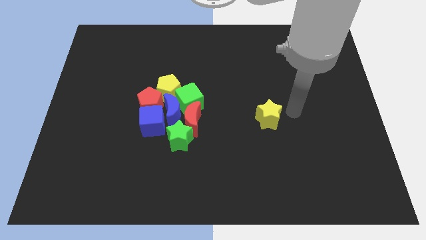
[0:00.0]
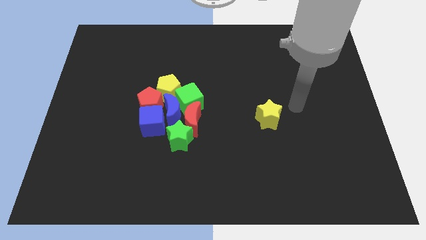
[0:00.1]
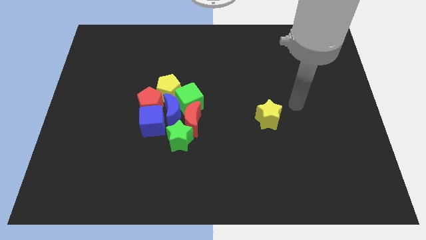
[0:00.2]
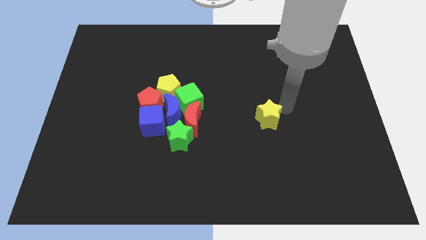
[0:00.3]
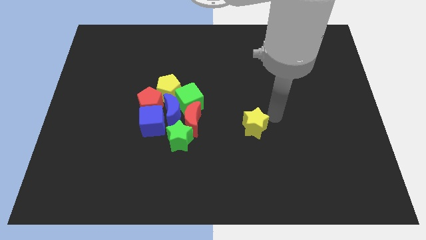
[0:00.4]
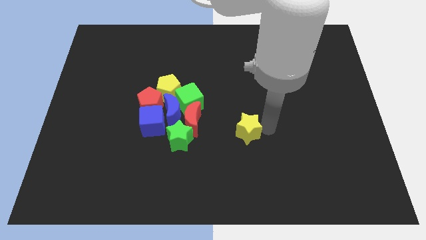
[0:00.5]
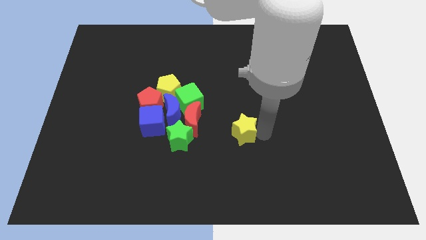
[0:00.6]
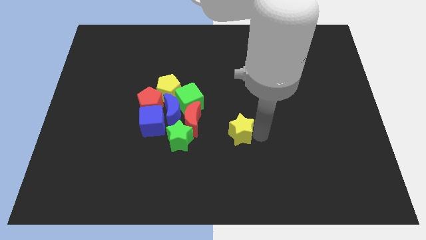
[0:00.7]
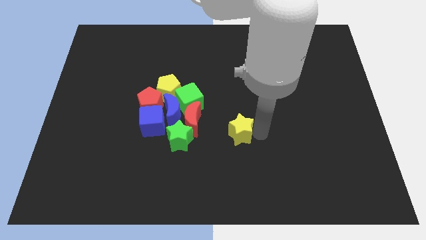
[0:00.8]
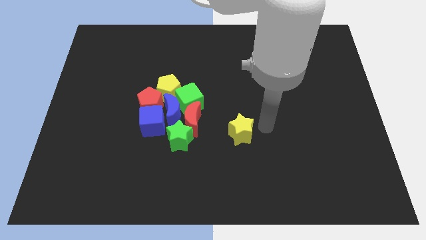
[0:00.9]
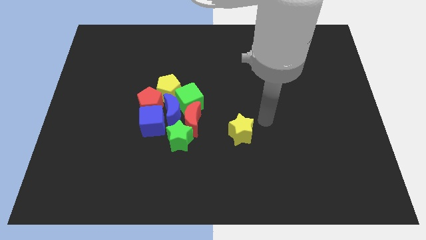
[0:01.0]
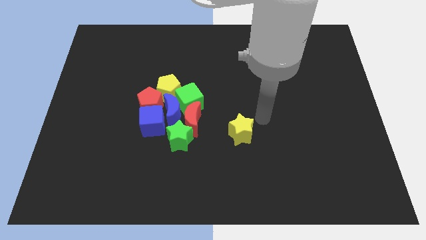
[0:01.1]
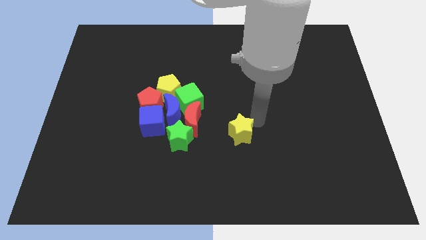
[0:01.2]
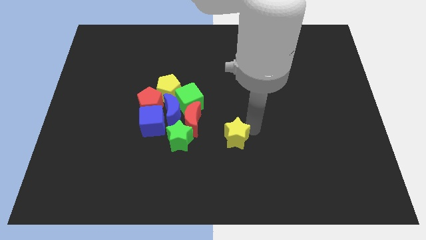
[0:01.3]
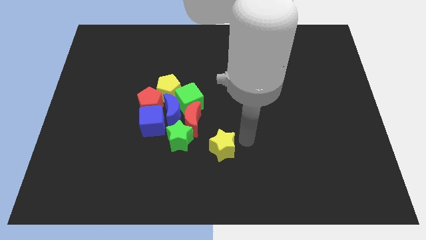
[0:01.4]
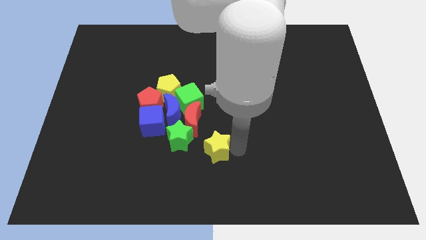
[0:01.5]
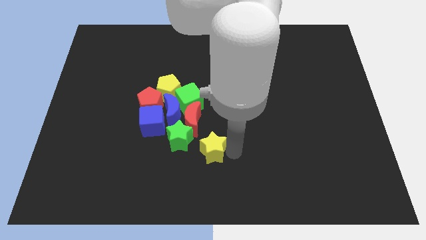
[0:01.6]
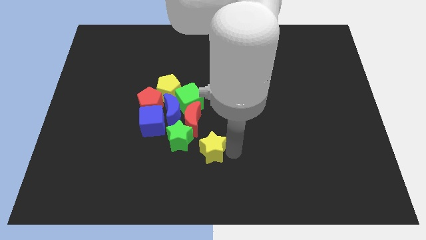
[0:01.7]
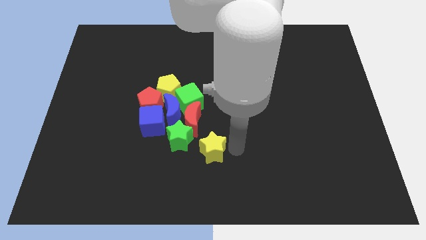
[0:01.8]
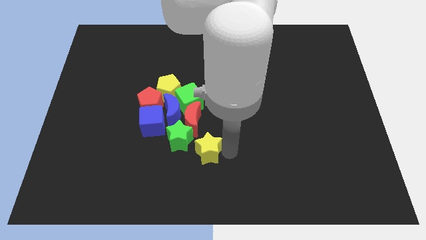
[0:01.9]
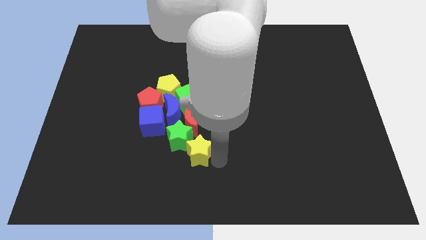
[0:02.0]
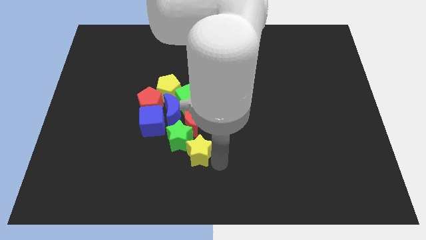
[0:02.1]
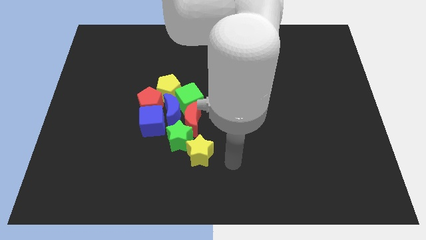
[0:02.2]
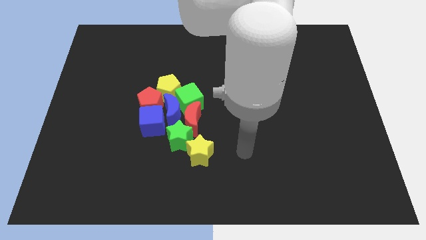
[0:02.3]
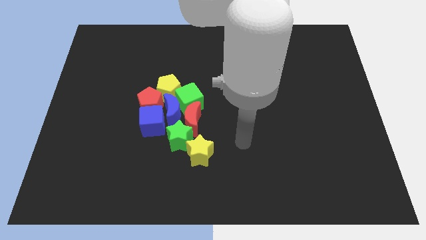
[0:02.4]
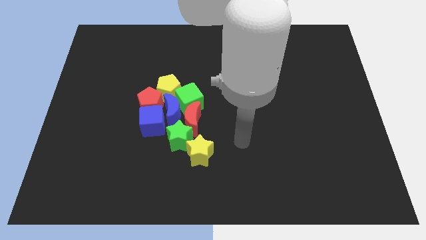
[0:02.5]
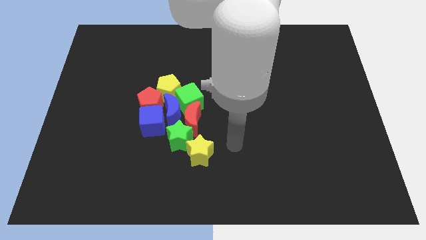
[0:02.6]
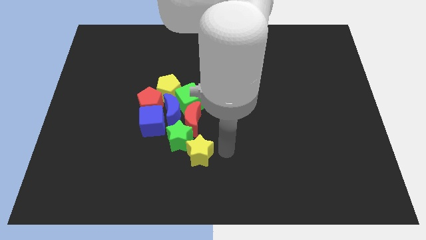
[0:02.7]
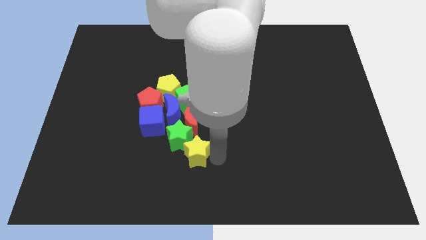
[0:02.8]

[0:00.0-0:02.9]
place the yellow star diagonally at the bottom right of the green star

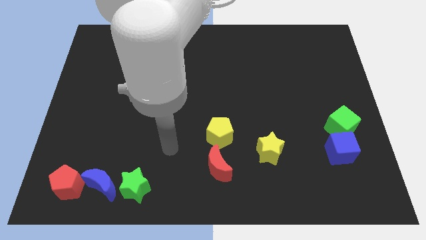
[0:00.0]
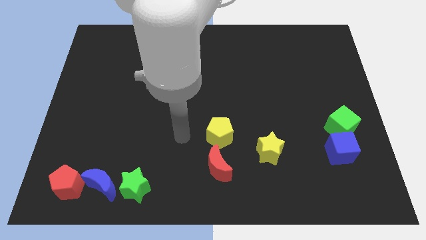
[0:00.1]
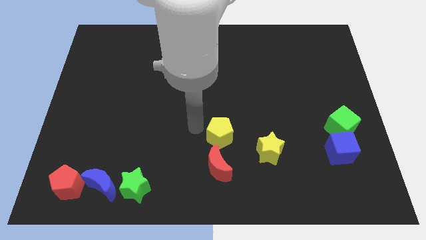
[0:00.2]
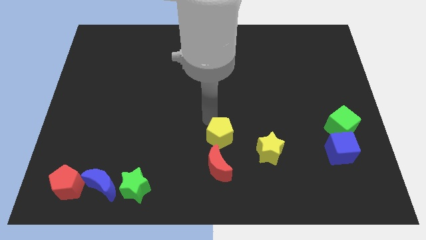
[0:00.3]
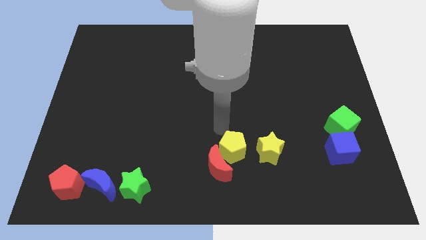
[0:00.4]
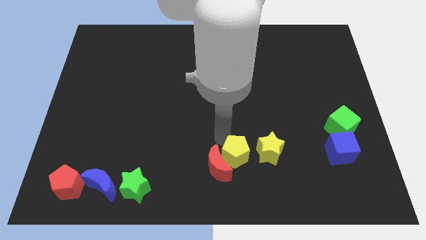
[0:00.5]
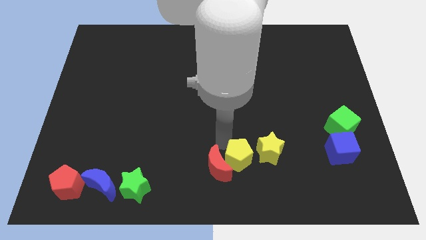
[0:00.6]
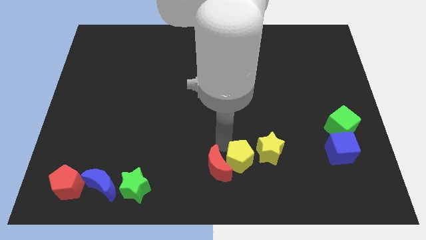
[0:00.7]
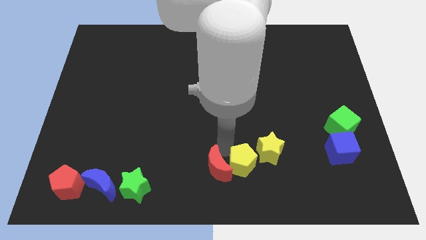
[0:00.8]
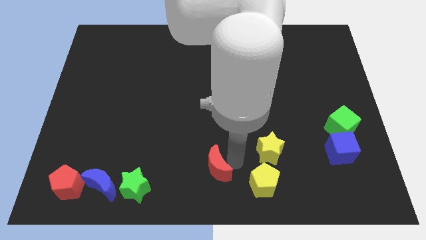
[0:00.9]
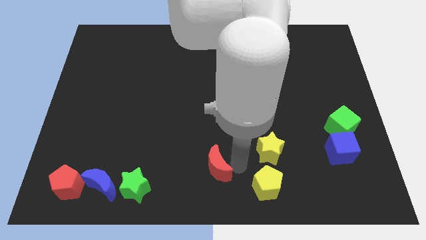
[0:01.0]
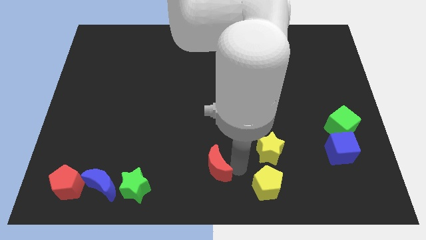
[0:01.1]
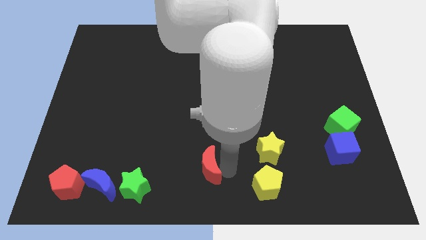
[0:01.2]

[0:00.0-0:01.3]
separate the yellow pentagon from the red crescent

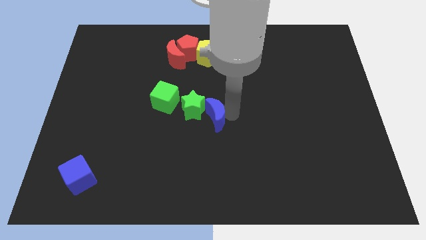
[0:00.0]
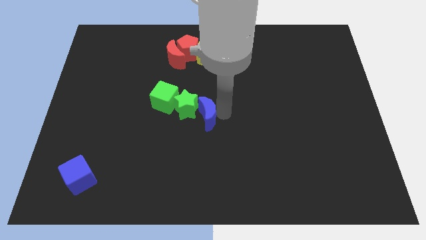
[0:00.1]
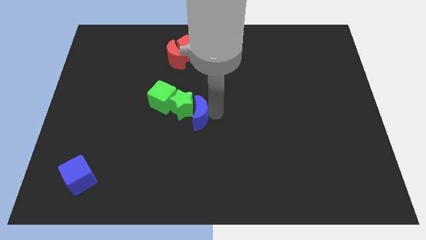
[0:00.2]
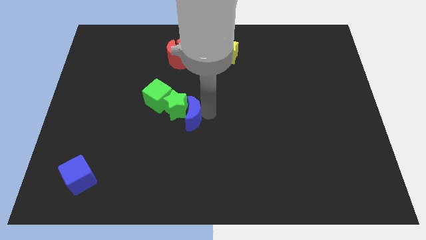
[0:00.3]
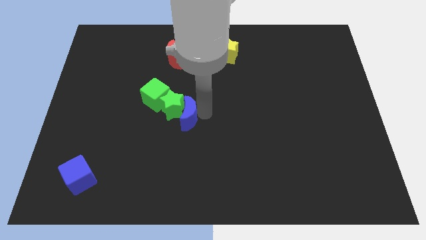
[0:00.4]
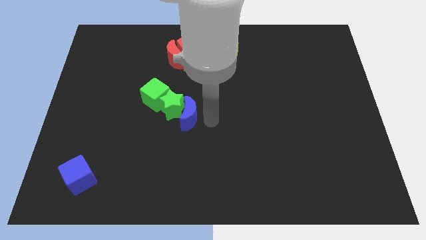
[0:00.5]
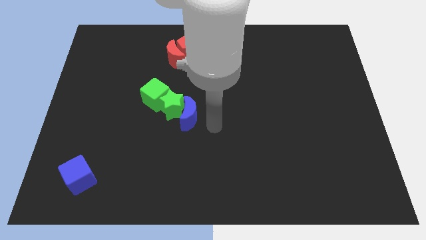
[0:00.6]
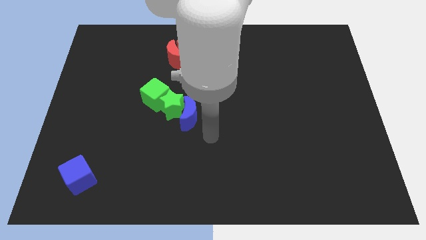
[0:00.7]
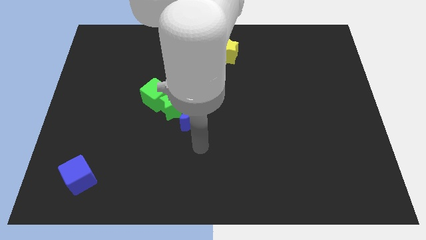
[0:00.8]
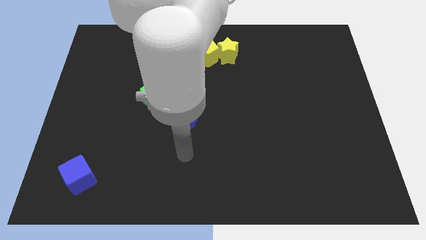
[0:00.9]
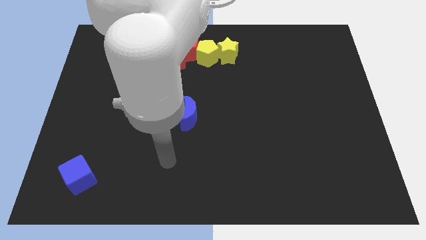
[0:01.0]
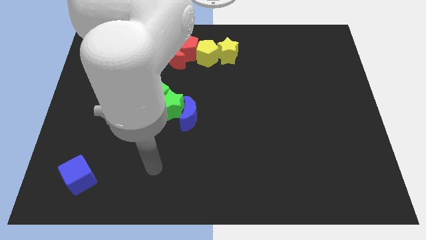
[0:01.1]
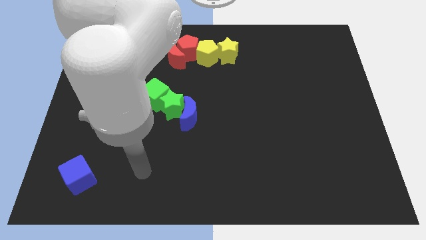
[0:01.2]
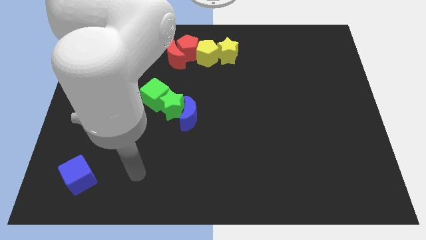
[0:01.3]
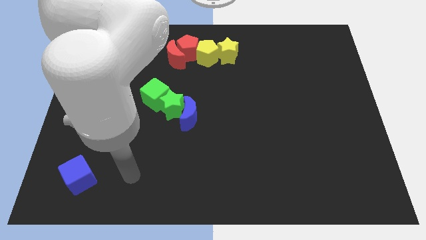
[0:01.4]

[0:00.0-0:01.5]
push green blocks with blue crescent towards left centre of the board

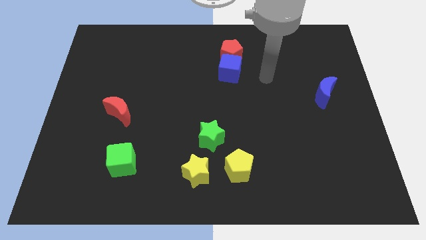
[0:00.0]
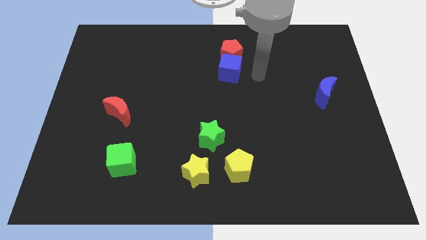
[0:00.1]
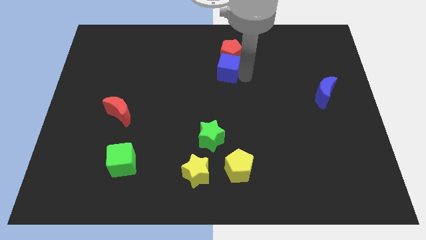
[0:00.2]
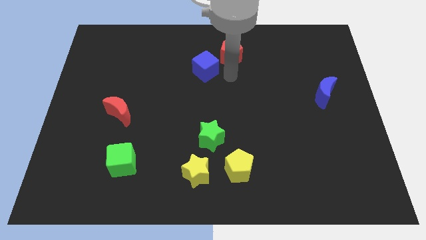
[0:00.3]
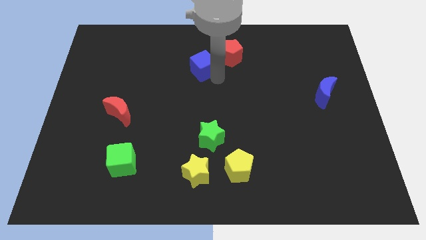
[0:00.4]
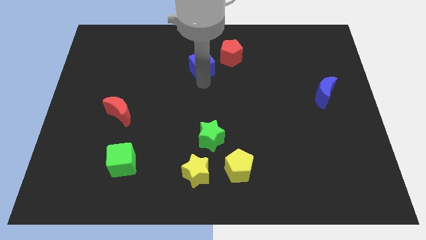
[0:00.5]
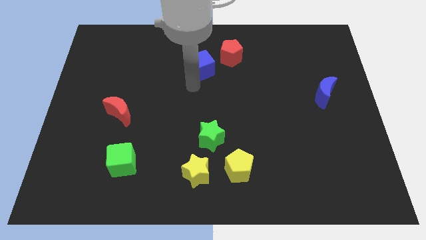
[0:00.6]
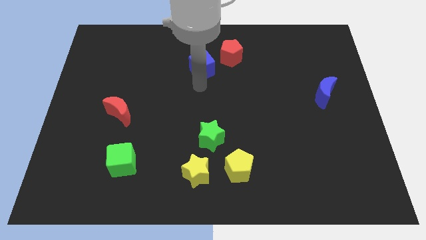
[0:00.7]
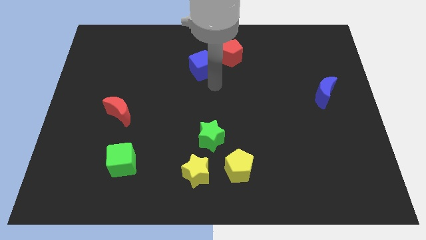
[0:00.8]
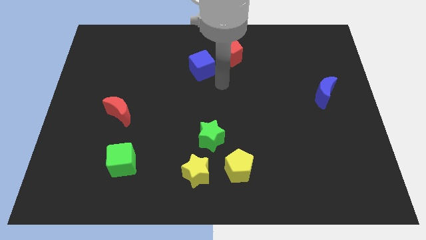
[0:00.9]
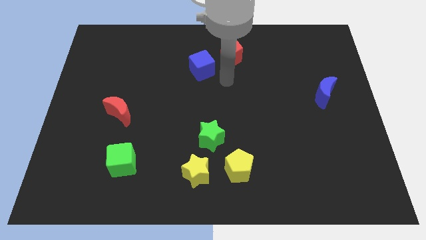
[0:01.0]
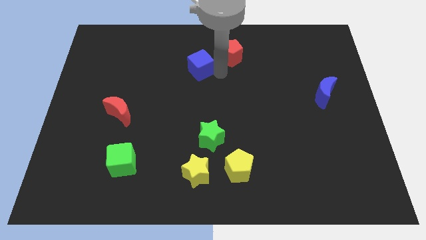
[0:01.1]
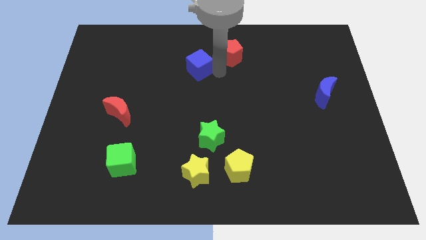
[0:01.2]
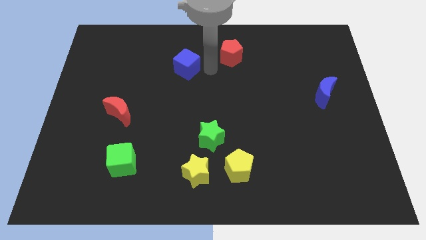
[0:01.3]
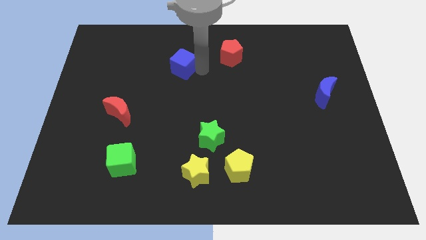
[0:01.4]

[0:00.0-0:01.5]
slide blue cube to the left

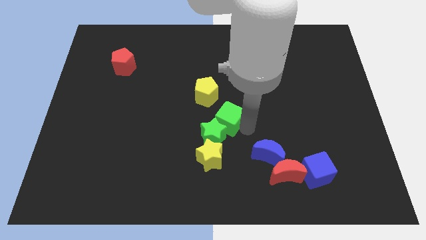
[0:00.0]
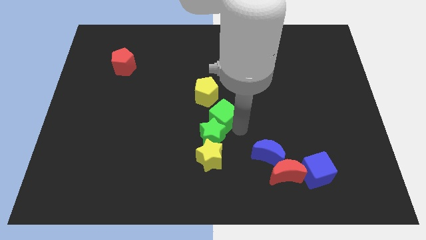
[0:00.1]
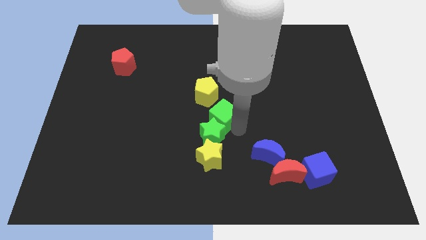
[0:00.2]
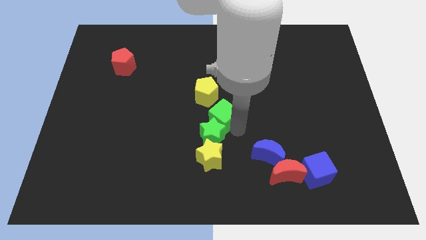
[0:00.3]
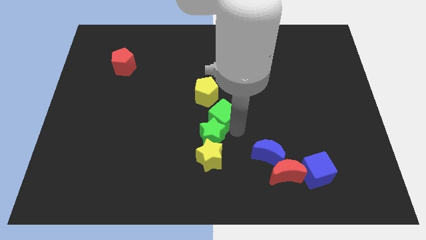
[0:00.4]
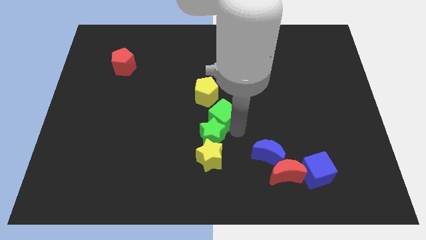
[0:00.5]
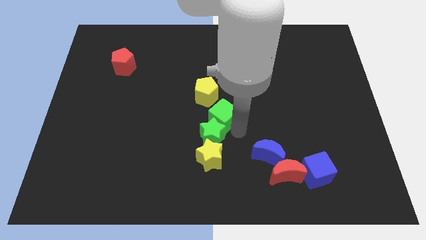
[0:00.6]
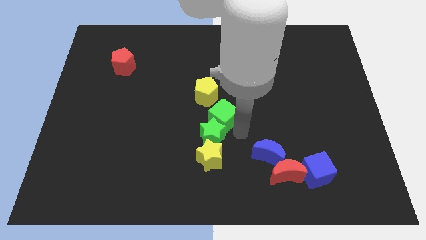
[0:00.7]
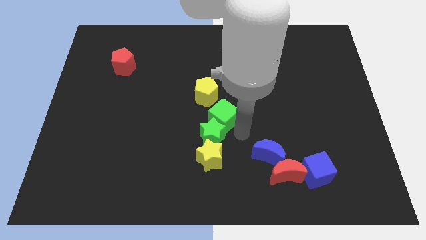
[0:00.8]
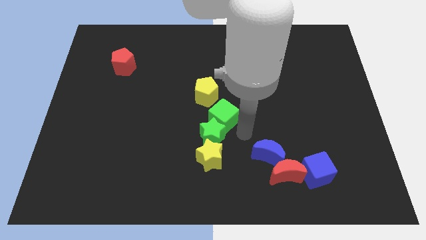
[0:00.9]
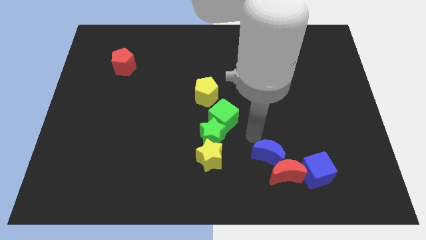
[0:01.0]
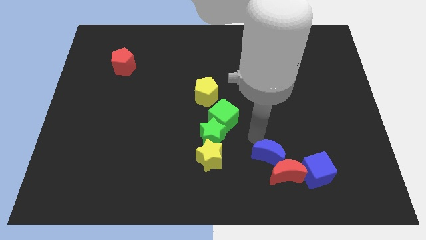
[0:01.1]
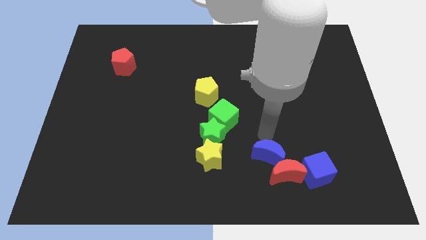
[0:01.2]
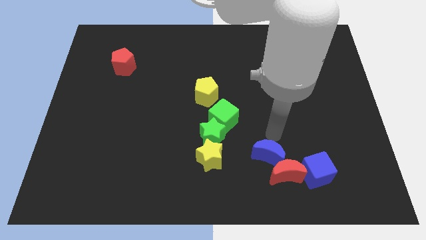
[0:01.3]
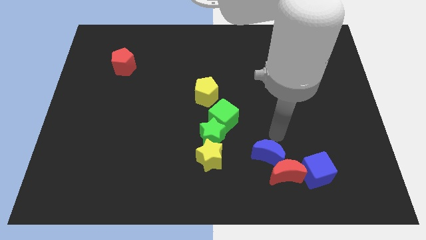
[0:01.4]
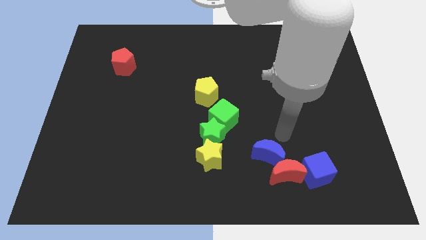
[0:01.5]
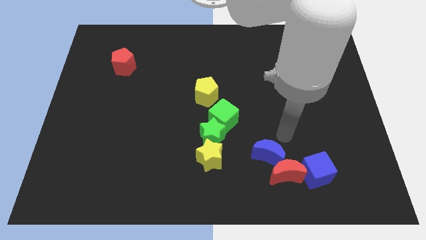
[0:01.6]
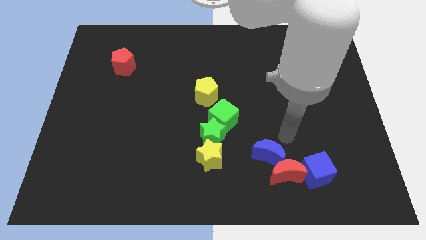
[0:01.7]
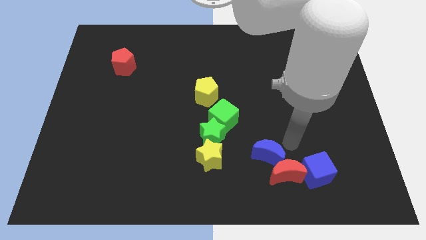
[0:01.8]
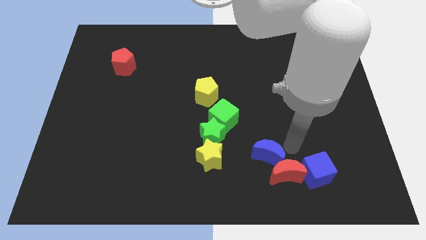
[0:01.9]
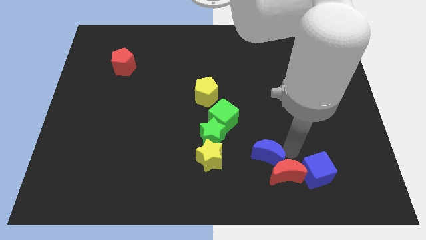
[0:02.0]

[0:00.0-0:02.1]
place your arm at the top of red crescent
